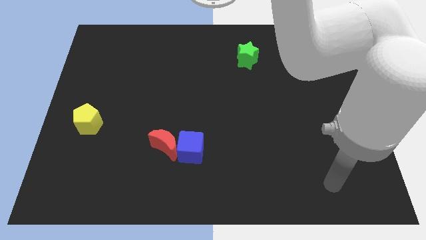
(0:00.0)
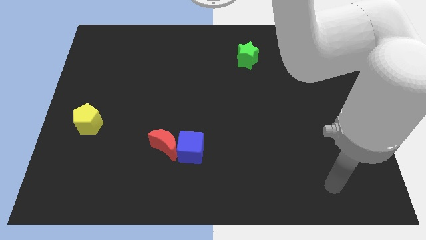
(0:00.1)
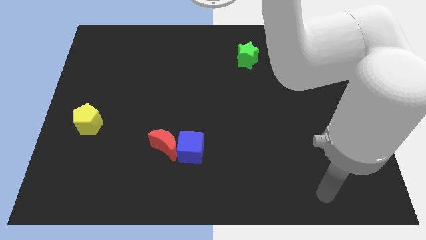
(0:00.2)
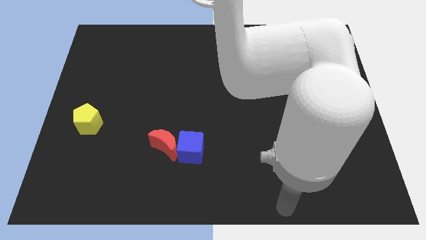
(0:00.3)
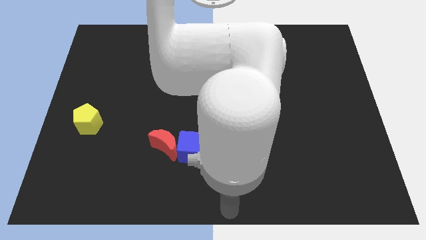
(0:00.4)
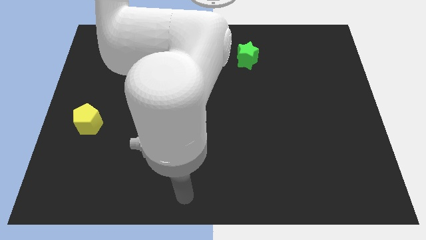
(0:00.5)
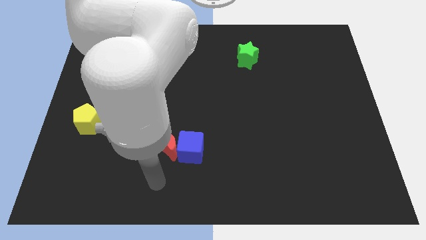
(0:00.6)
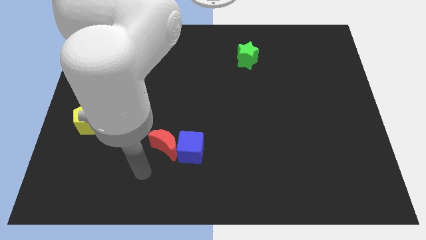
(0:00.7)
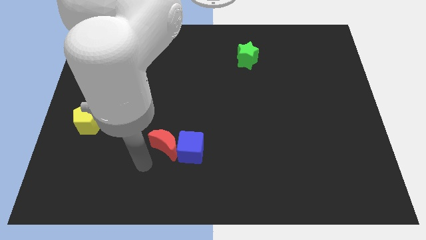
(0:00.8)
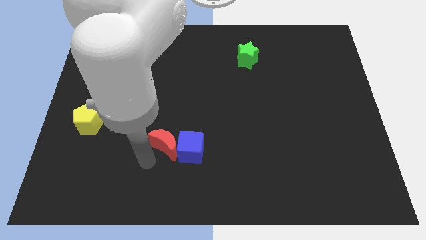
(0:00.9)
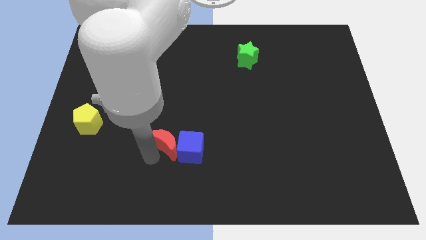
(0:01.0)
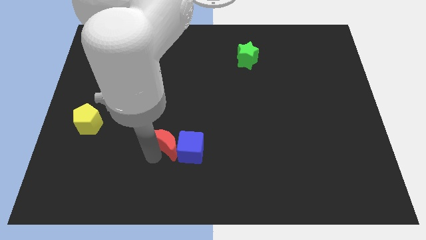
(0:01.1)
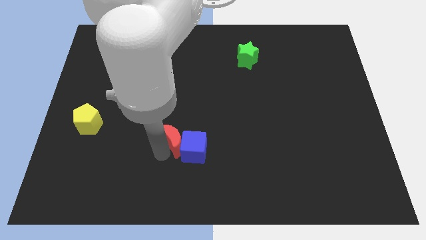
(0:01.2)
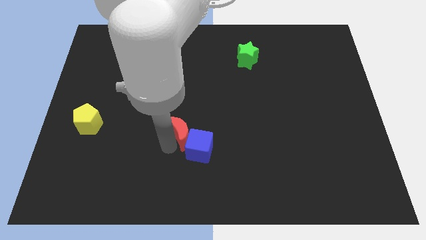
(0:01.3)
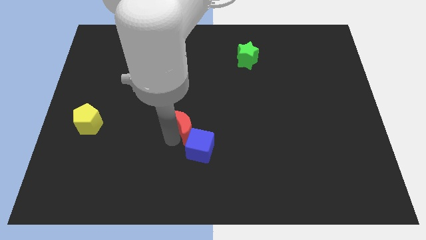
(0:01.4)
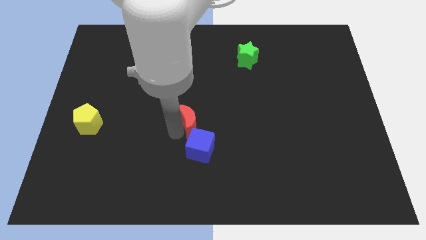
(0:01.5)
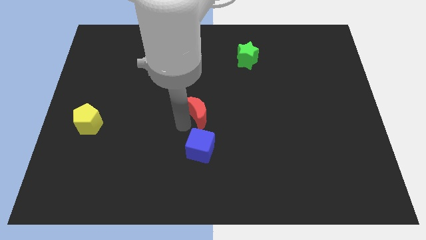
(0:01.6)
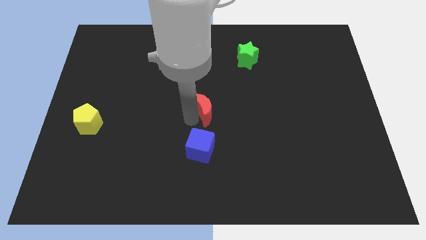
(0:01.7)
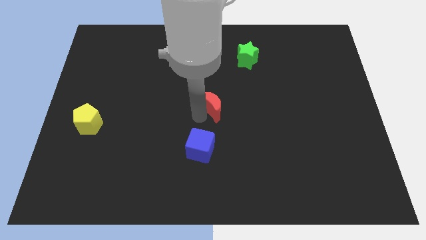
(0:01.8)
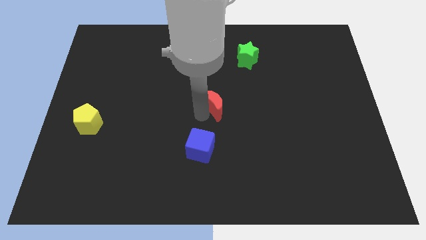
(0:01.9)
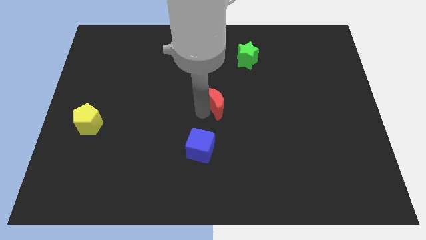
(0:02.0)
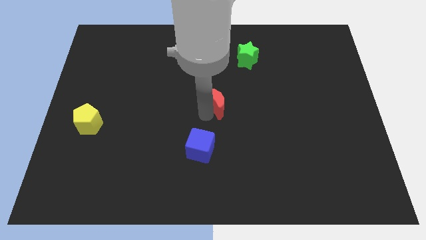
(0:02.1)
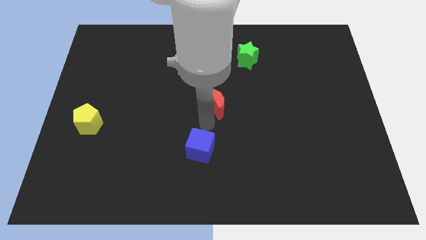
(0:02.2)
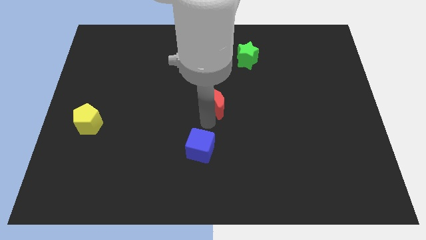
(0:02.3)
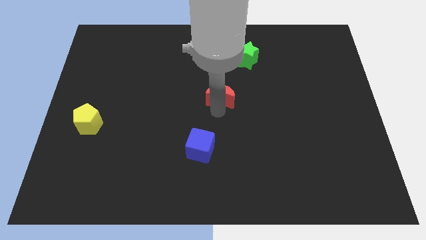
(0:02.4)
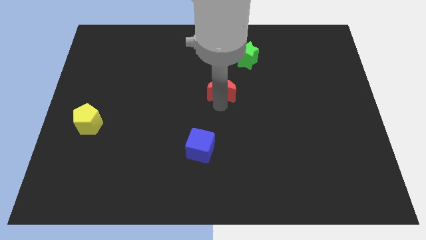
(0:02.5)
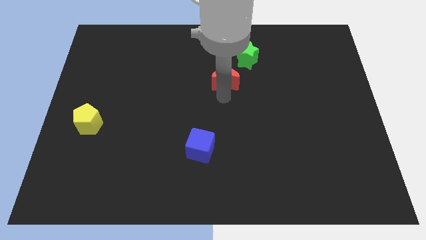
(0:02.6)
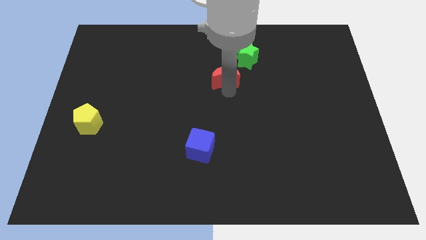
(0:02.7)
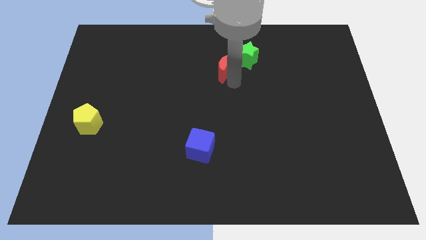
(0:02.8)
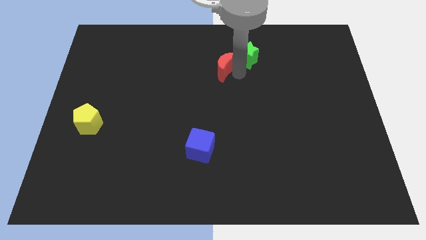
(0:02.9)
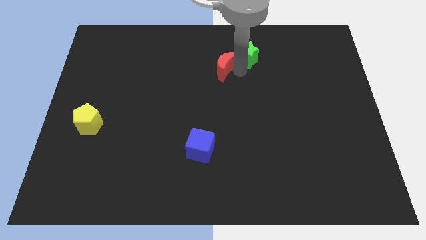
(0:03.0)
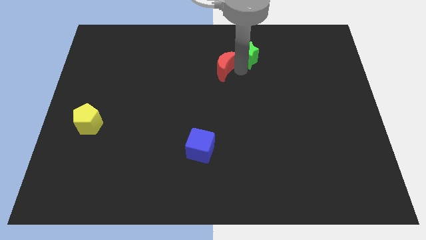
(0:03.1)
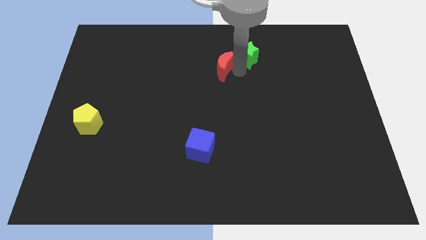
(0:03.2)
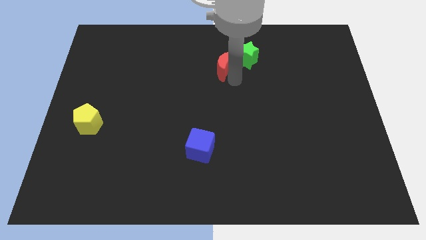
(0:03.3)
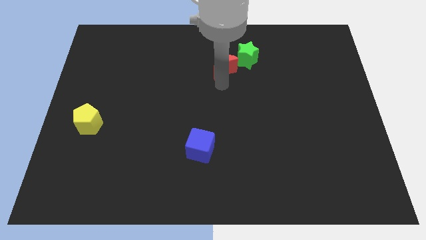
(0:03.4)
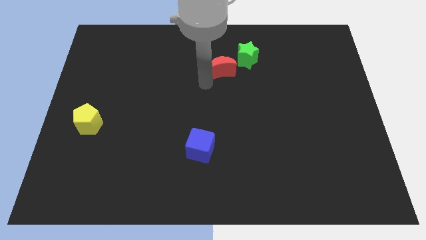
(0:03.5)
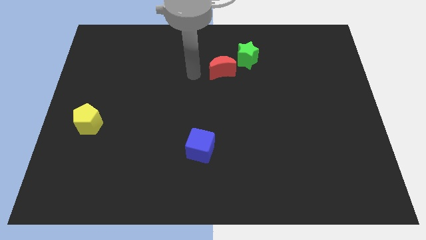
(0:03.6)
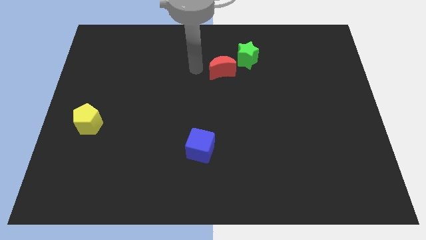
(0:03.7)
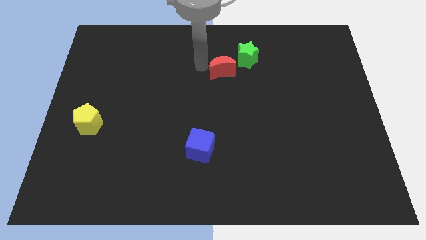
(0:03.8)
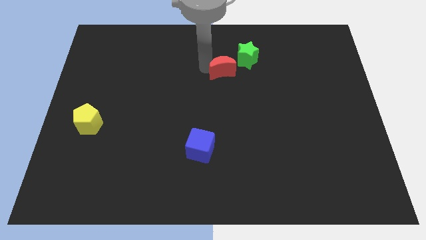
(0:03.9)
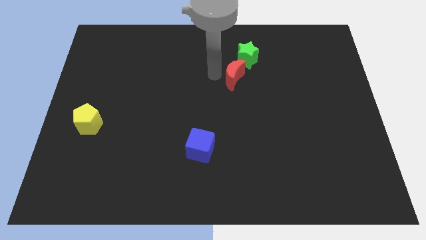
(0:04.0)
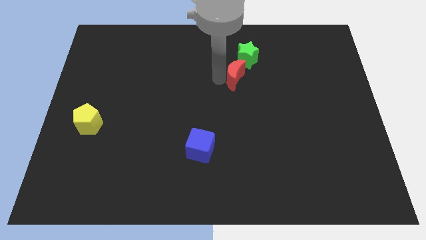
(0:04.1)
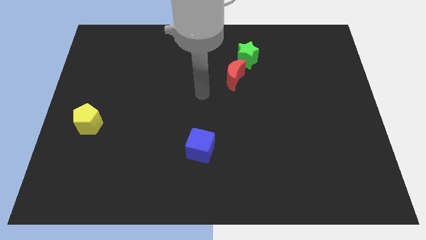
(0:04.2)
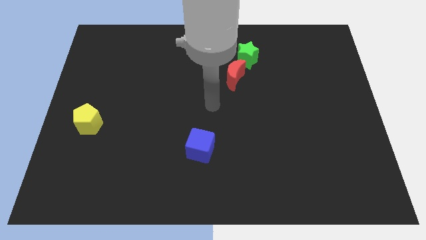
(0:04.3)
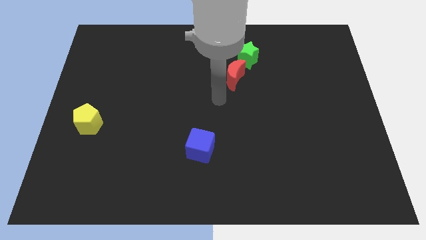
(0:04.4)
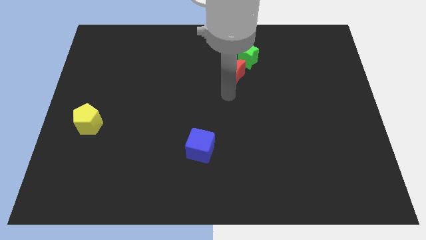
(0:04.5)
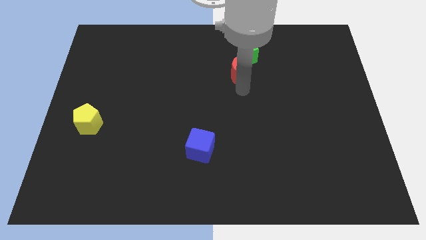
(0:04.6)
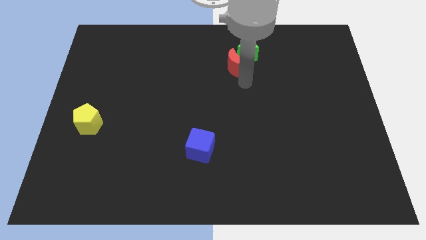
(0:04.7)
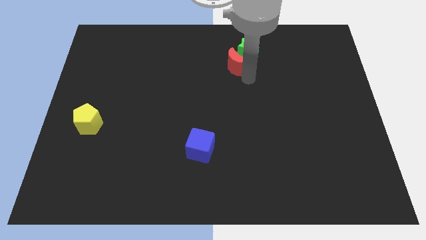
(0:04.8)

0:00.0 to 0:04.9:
slide the red moon next to the green block

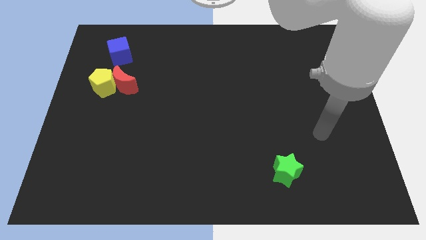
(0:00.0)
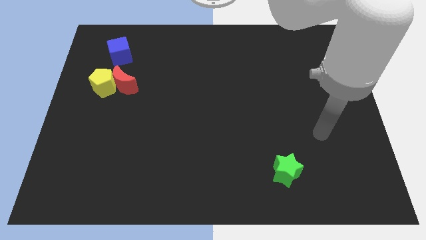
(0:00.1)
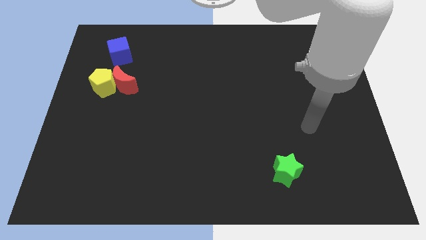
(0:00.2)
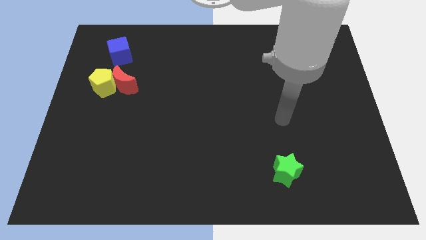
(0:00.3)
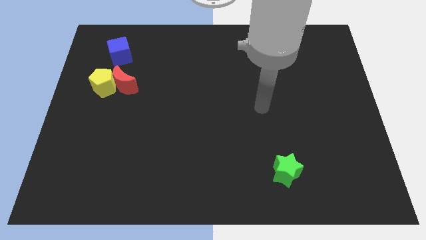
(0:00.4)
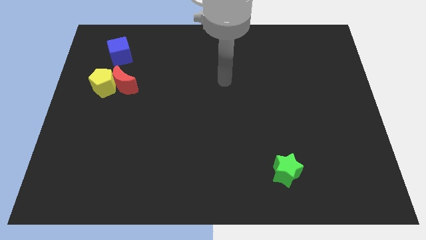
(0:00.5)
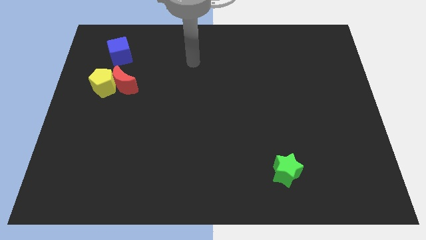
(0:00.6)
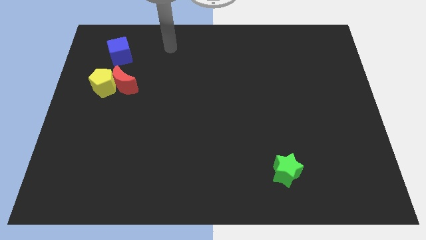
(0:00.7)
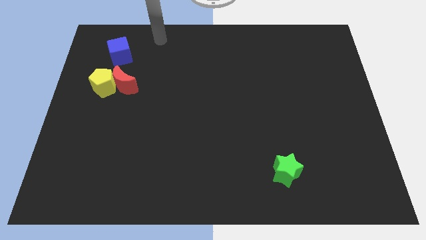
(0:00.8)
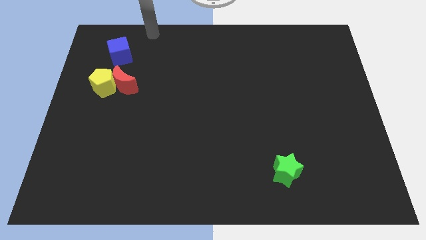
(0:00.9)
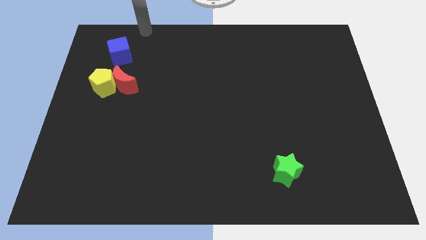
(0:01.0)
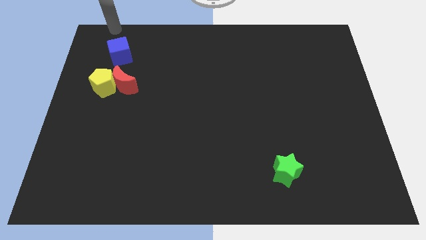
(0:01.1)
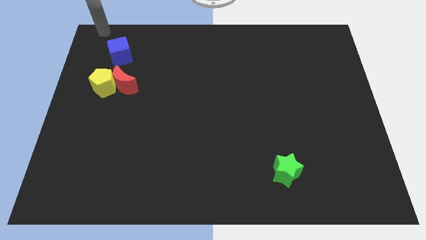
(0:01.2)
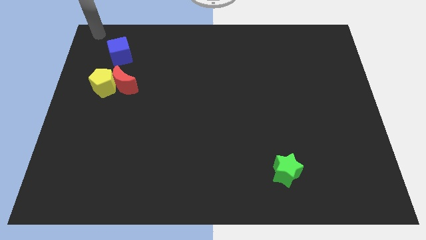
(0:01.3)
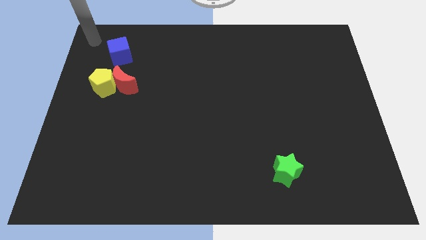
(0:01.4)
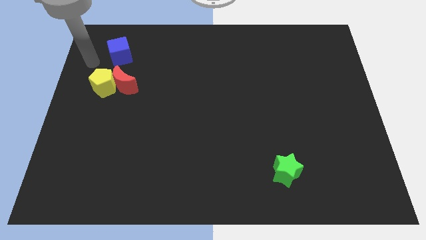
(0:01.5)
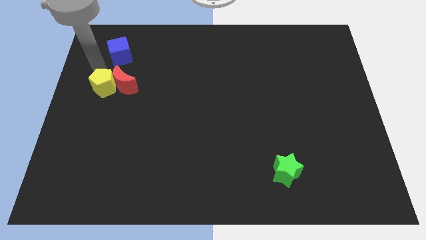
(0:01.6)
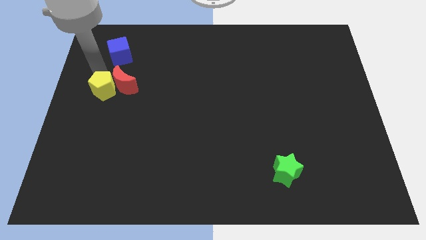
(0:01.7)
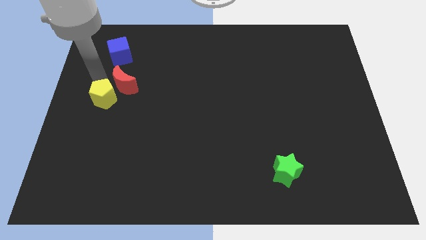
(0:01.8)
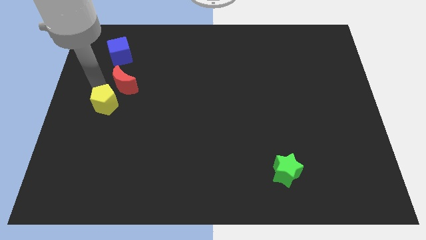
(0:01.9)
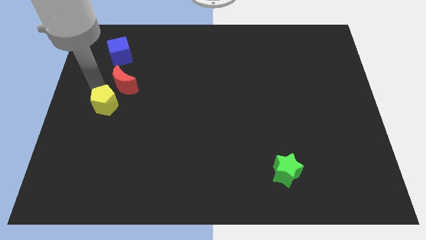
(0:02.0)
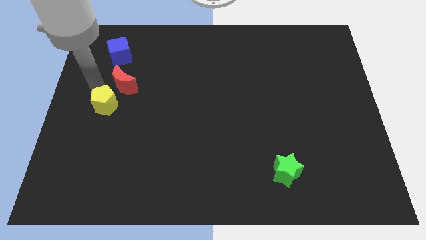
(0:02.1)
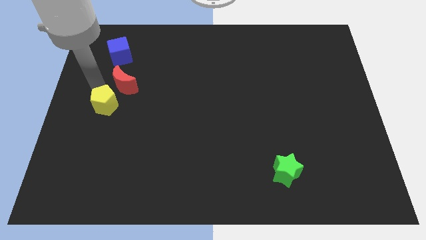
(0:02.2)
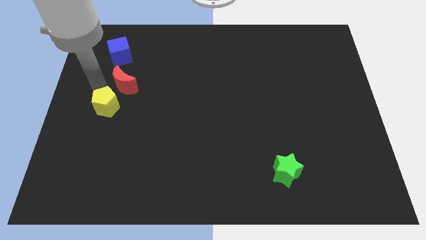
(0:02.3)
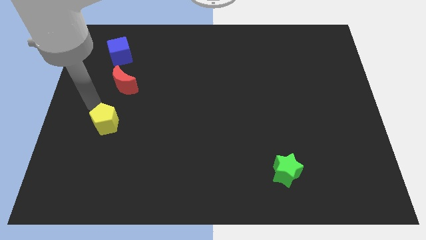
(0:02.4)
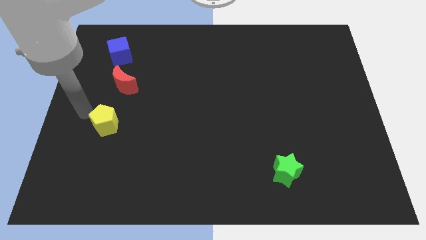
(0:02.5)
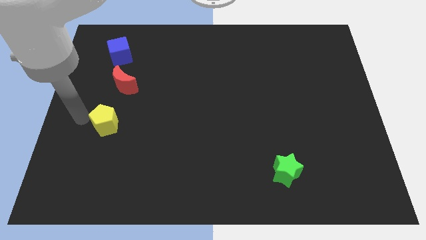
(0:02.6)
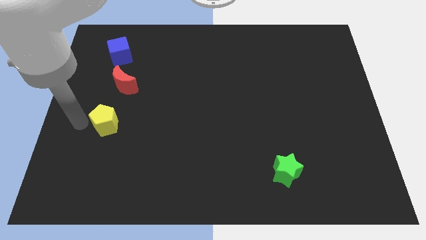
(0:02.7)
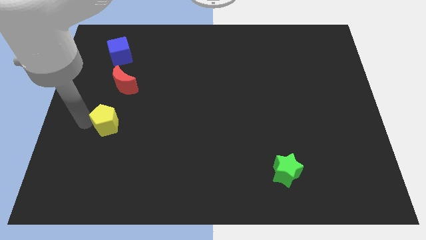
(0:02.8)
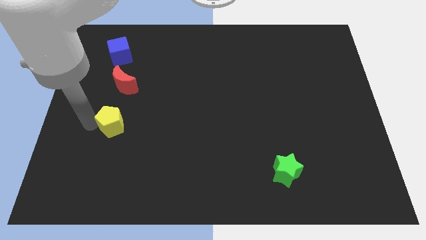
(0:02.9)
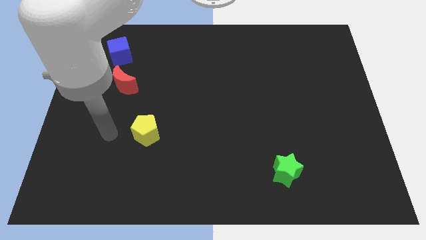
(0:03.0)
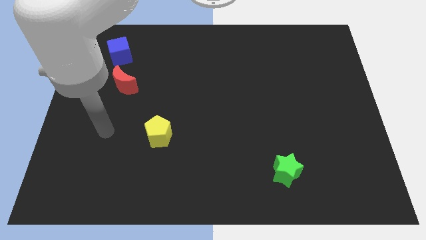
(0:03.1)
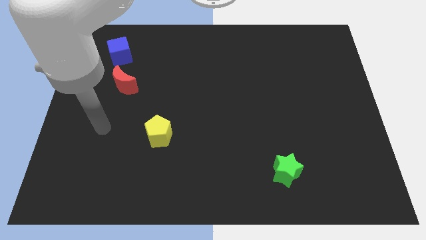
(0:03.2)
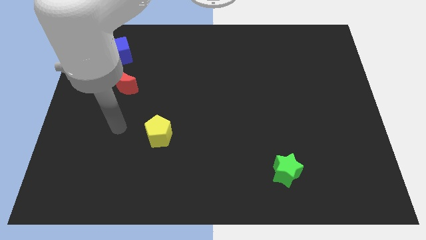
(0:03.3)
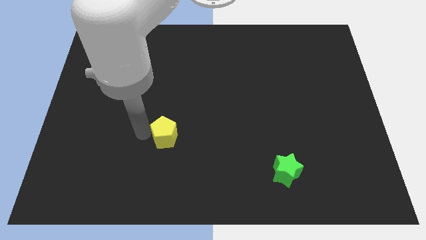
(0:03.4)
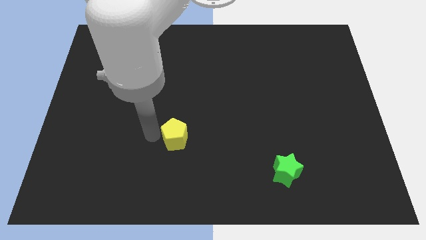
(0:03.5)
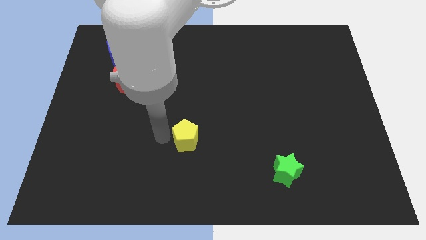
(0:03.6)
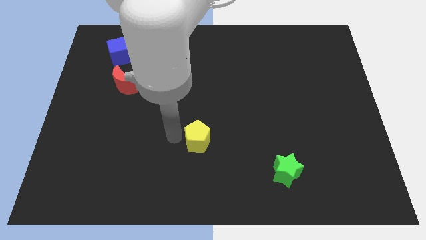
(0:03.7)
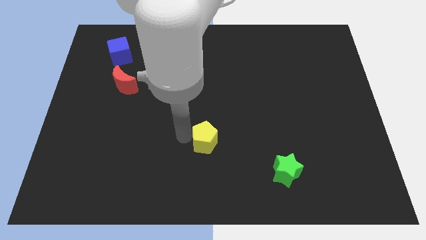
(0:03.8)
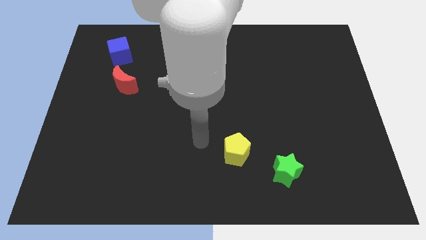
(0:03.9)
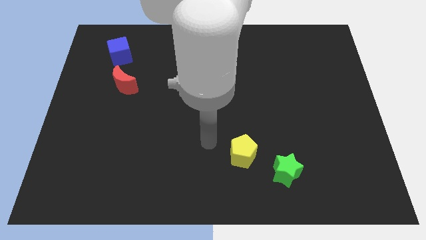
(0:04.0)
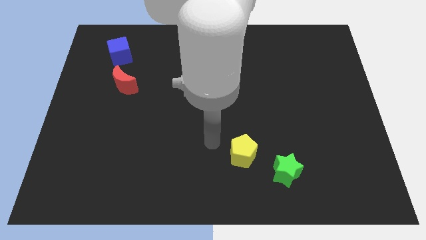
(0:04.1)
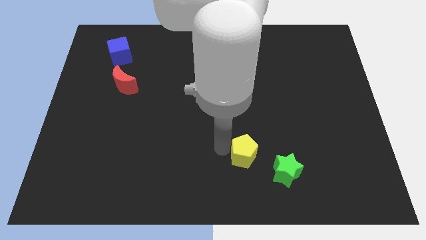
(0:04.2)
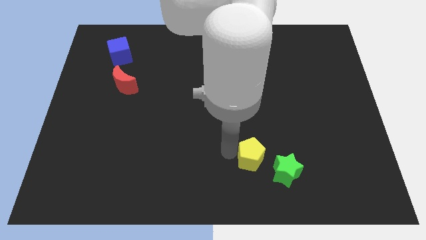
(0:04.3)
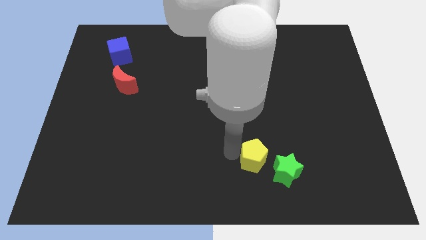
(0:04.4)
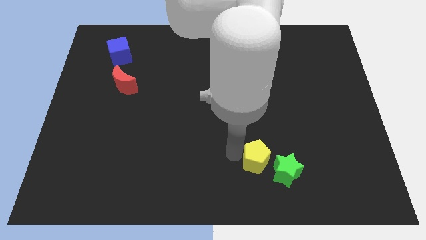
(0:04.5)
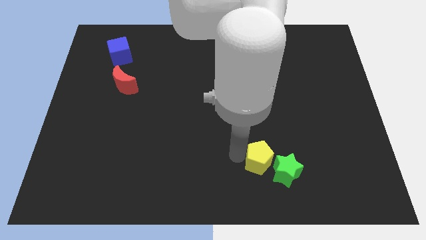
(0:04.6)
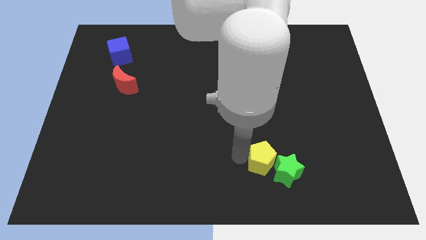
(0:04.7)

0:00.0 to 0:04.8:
put the yellow block towards the green block
